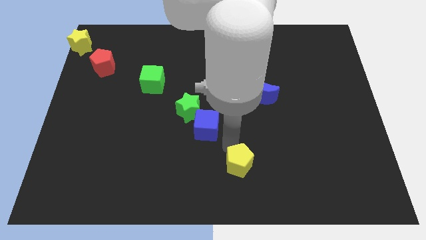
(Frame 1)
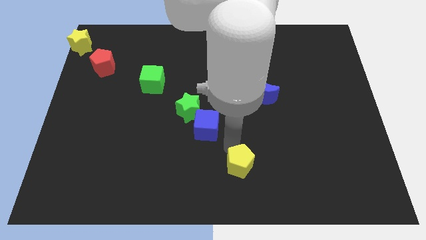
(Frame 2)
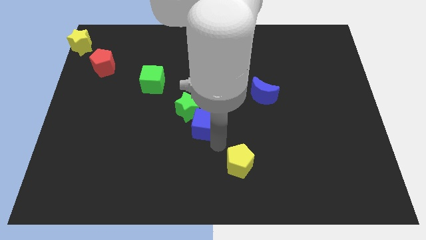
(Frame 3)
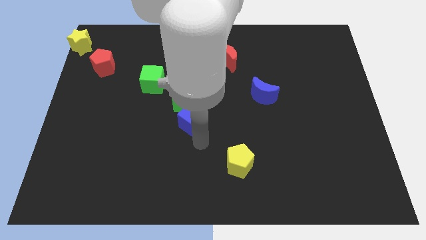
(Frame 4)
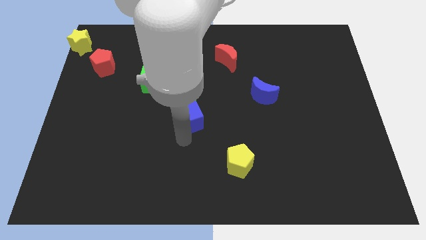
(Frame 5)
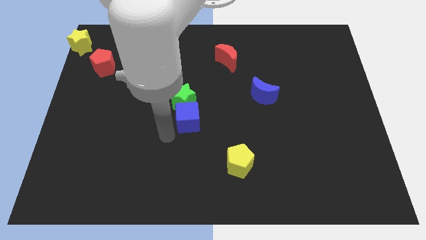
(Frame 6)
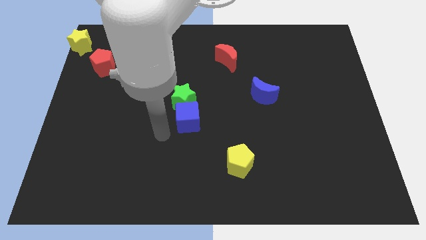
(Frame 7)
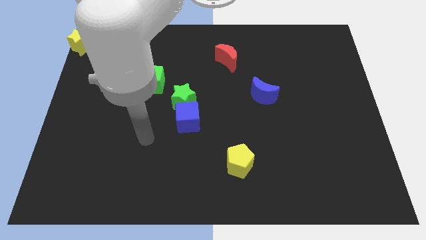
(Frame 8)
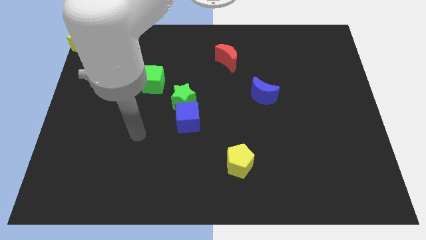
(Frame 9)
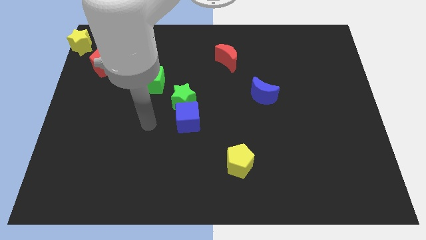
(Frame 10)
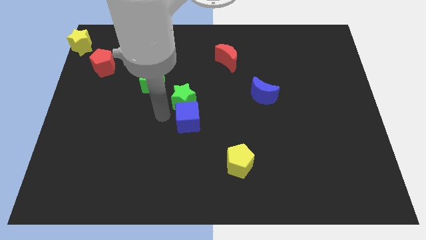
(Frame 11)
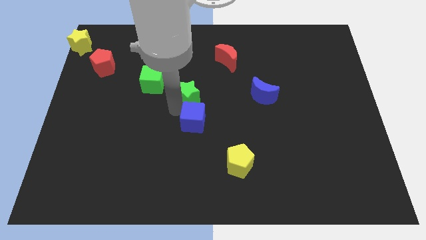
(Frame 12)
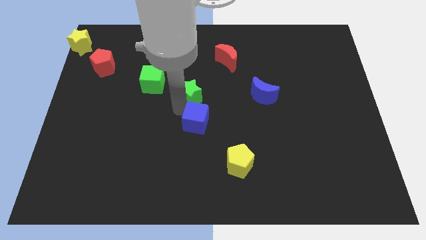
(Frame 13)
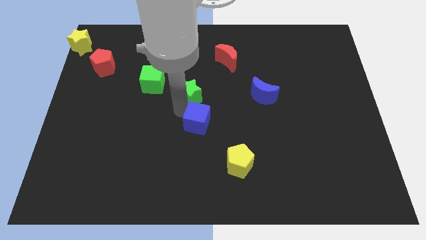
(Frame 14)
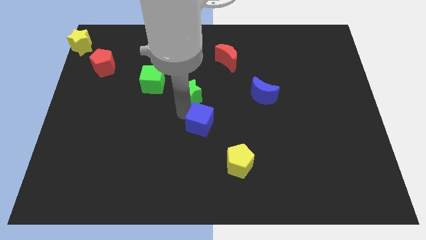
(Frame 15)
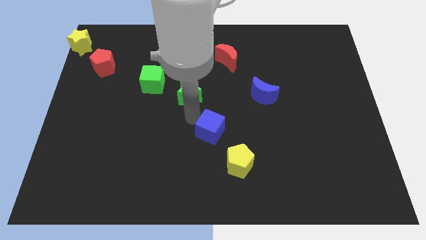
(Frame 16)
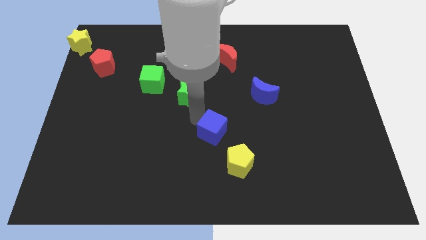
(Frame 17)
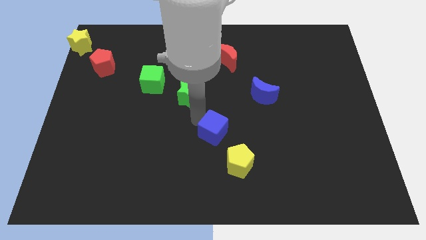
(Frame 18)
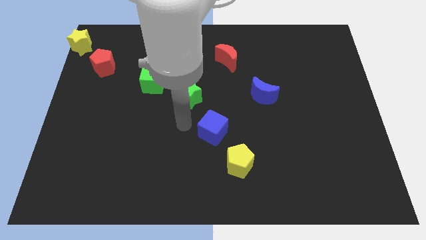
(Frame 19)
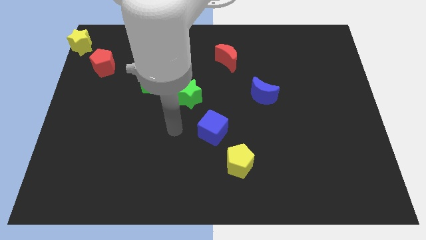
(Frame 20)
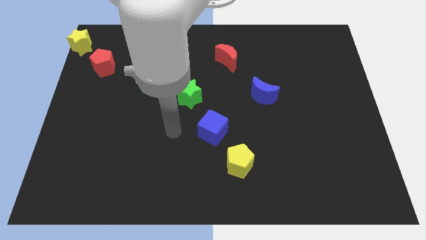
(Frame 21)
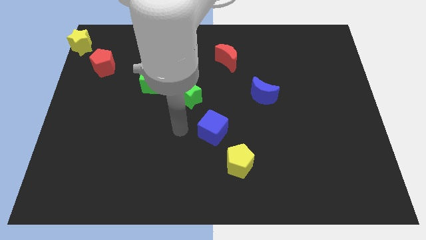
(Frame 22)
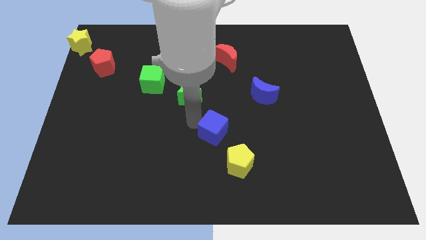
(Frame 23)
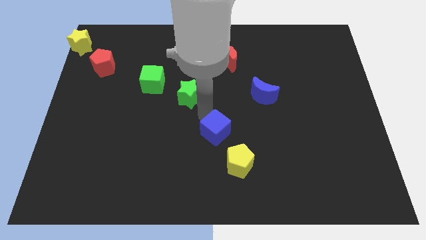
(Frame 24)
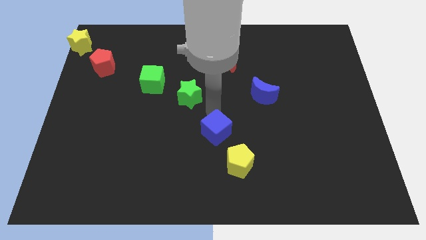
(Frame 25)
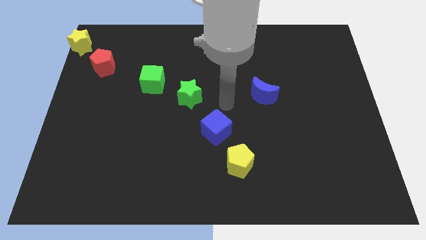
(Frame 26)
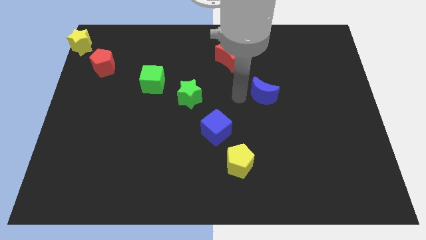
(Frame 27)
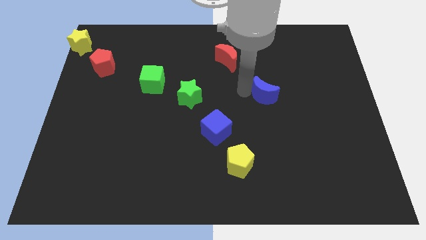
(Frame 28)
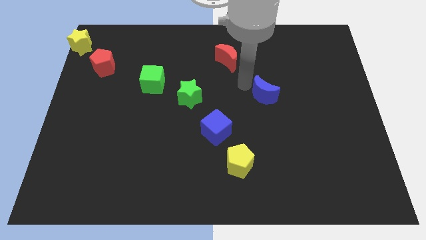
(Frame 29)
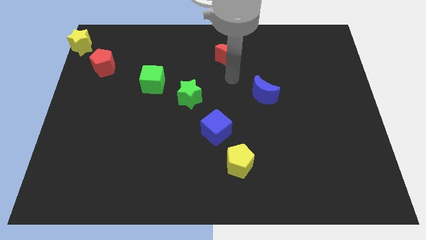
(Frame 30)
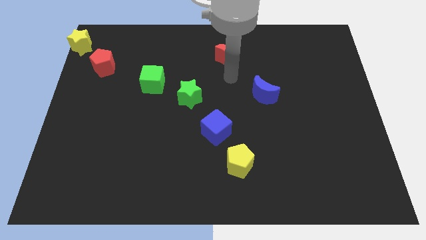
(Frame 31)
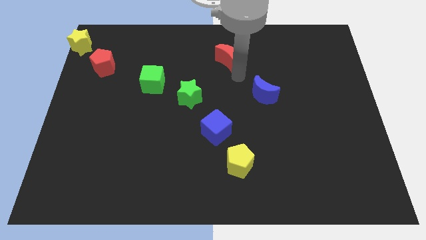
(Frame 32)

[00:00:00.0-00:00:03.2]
separate green star and the blue cube

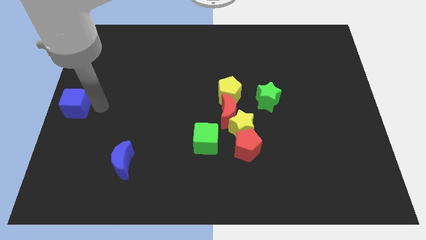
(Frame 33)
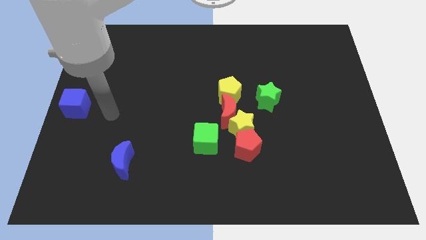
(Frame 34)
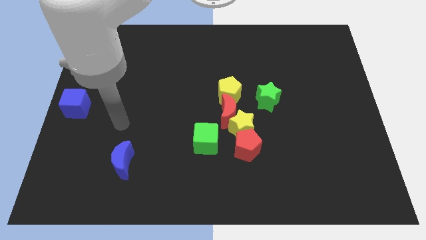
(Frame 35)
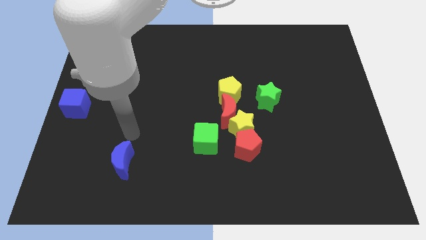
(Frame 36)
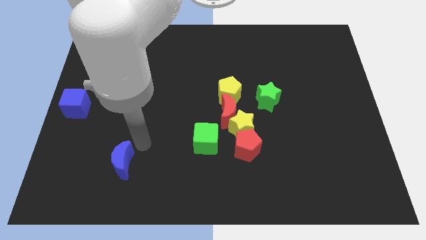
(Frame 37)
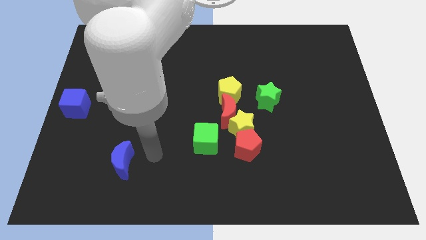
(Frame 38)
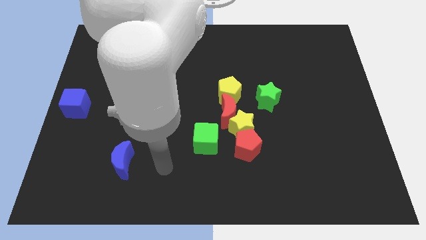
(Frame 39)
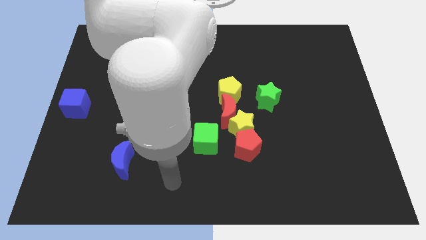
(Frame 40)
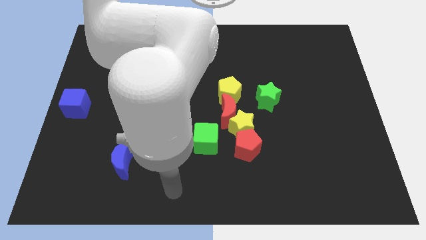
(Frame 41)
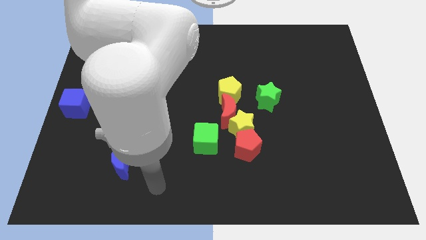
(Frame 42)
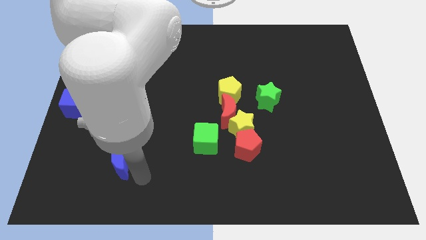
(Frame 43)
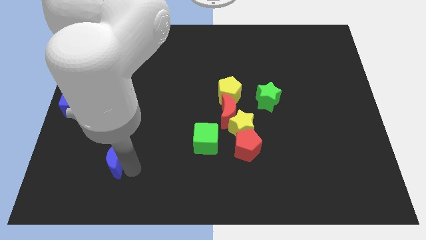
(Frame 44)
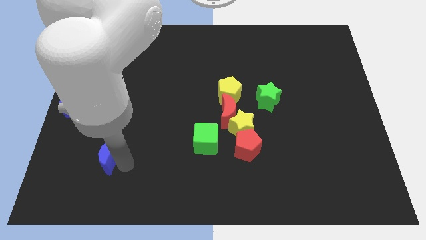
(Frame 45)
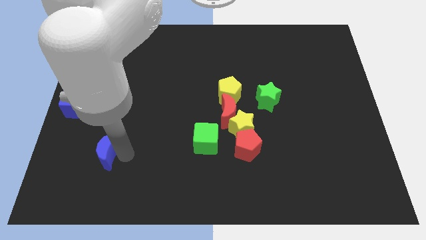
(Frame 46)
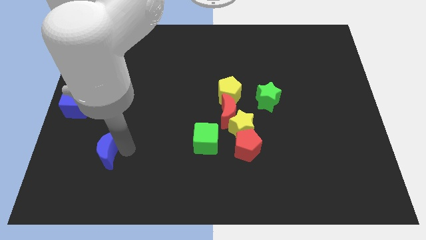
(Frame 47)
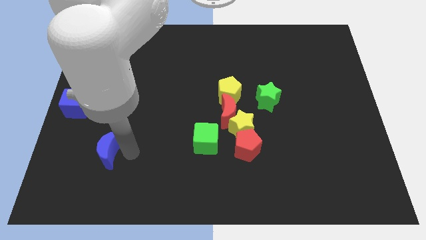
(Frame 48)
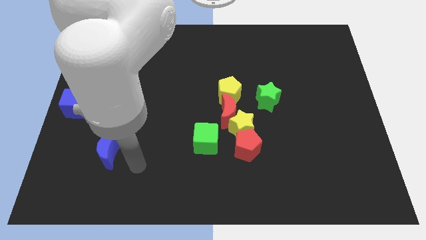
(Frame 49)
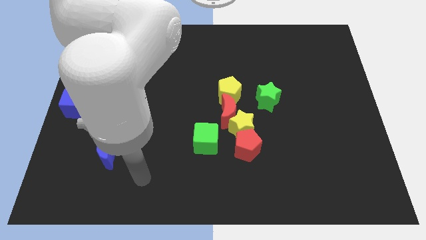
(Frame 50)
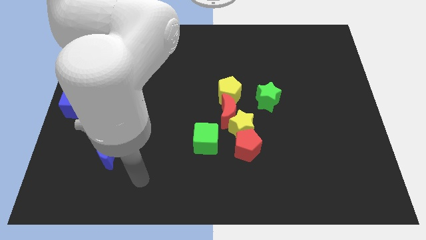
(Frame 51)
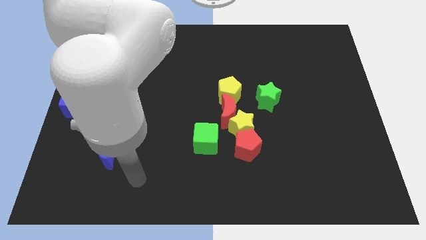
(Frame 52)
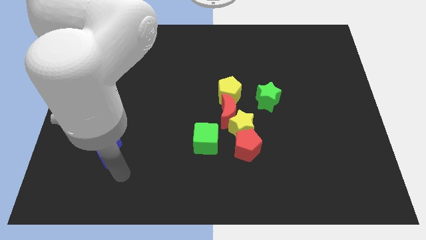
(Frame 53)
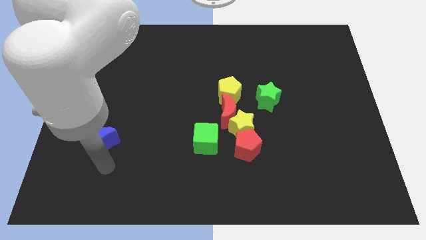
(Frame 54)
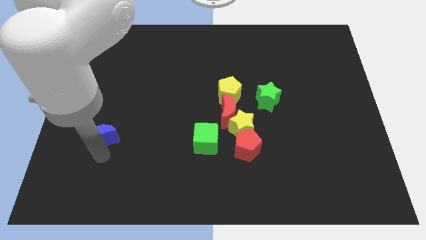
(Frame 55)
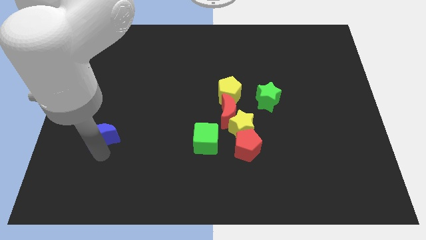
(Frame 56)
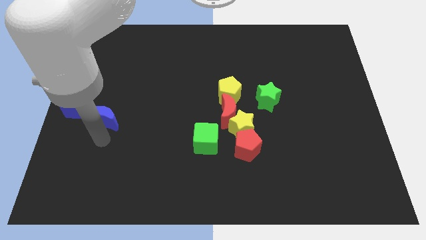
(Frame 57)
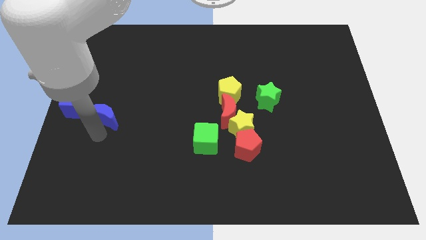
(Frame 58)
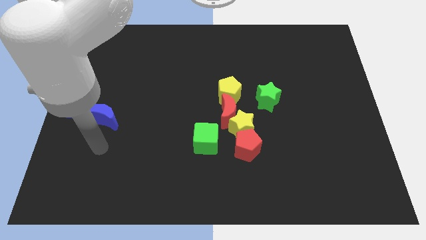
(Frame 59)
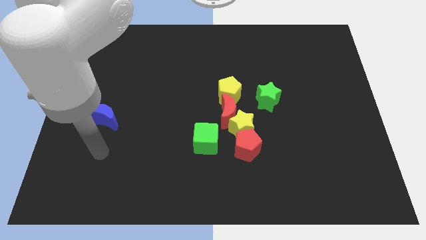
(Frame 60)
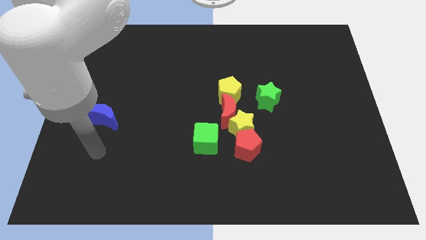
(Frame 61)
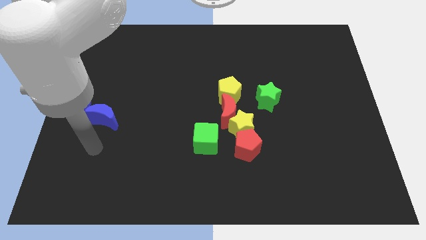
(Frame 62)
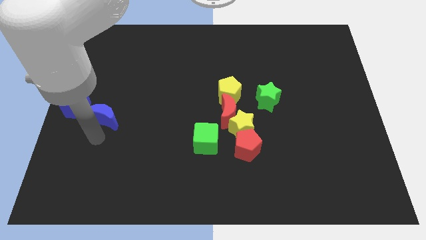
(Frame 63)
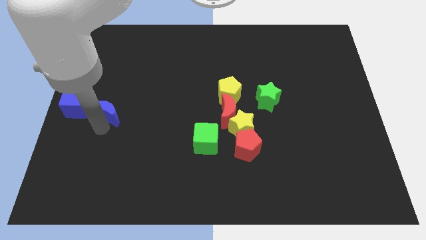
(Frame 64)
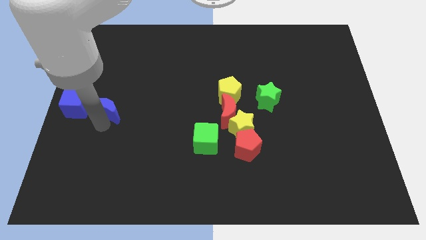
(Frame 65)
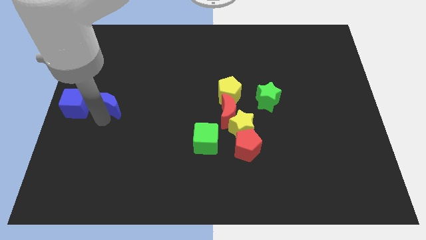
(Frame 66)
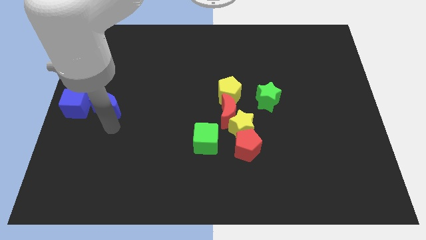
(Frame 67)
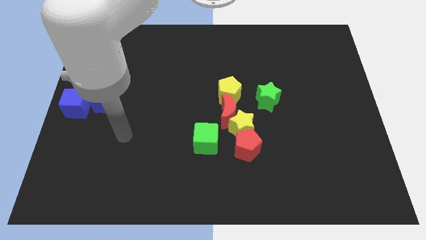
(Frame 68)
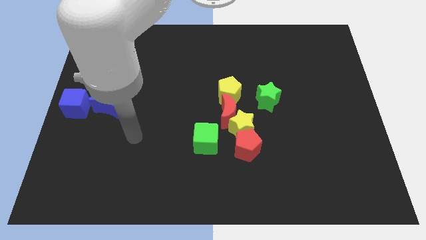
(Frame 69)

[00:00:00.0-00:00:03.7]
place the blue moon to the right of the blue cube

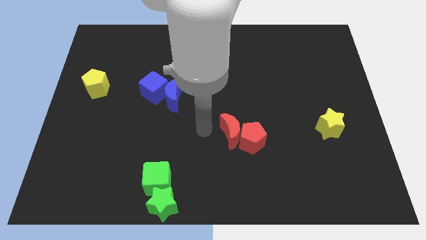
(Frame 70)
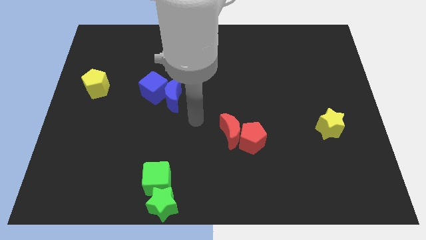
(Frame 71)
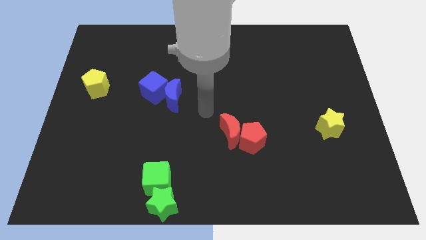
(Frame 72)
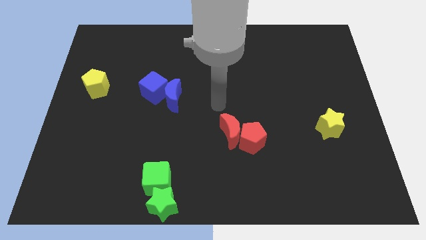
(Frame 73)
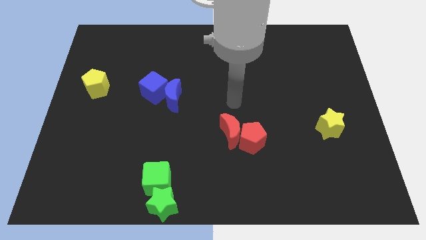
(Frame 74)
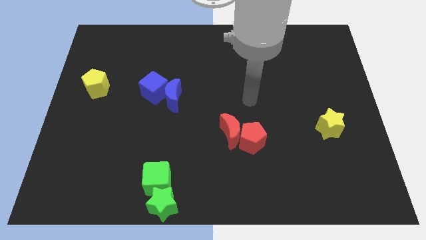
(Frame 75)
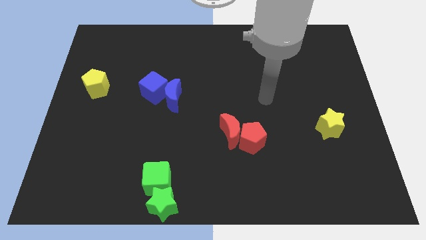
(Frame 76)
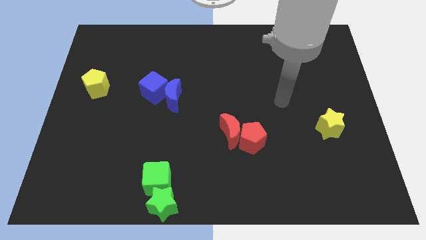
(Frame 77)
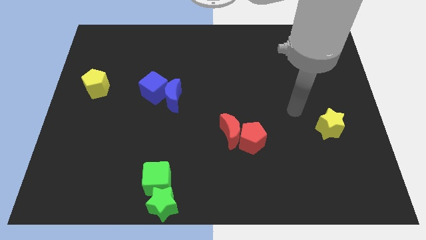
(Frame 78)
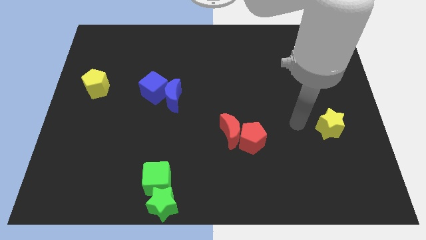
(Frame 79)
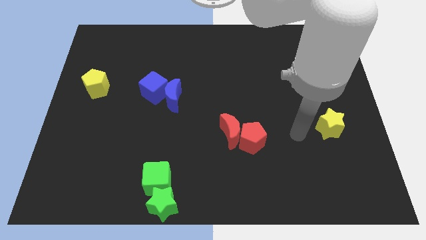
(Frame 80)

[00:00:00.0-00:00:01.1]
point your arm in between the yellow star and red pentagon

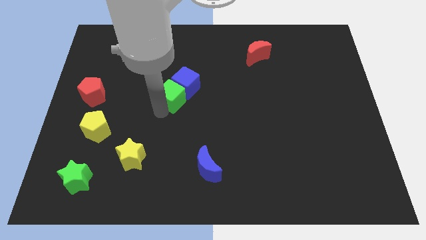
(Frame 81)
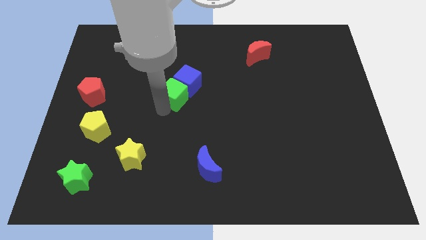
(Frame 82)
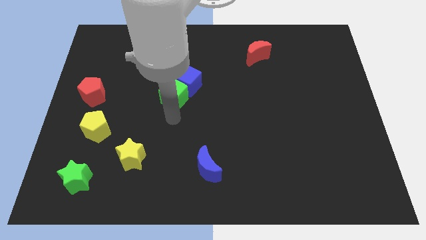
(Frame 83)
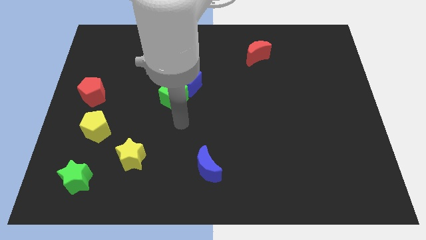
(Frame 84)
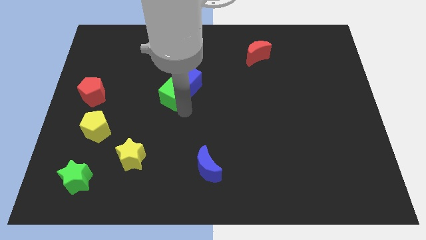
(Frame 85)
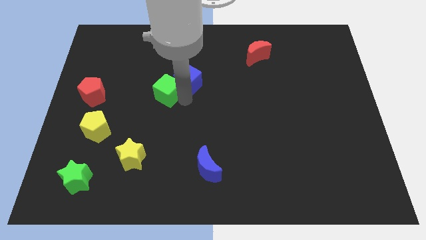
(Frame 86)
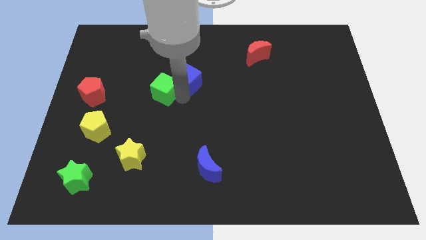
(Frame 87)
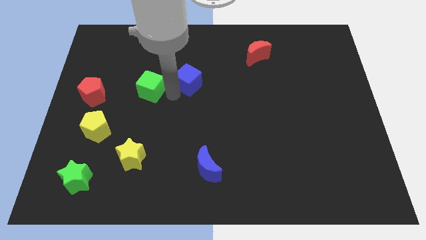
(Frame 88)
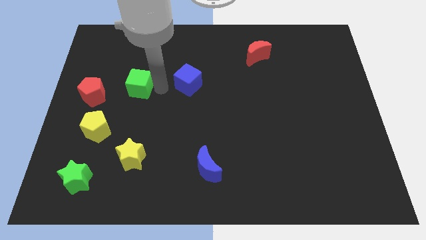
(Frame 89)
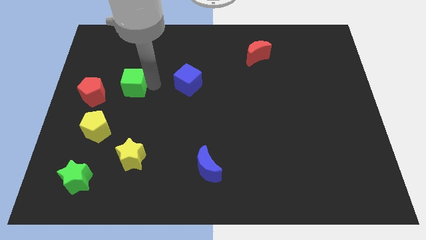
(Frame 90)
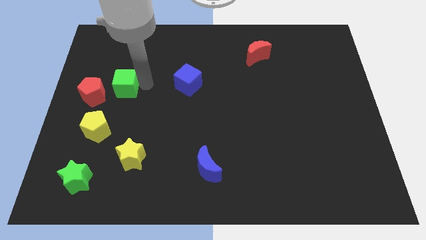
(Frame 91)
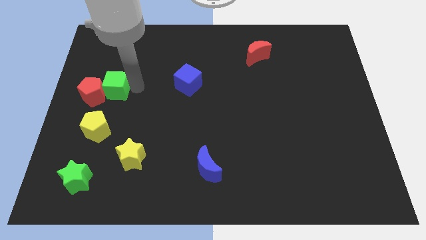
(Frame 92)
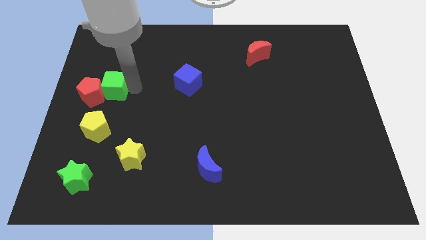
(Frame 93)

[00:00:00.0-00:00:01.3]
push the green cube into the red pentagon
